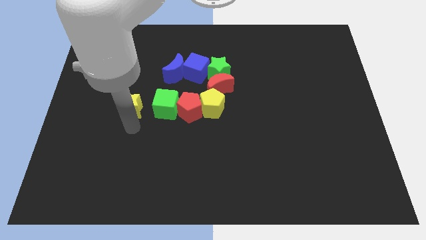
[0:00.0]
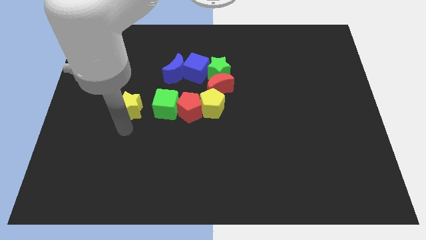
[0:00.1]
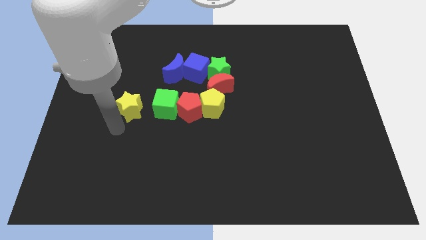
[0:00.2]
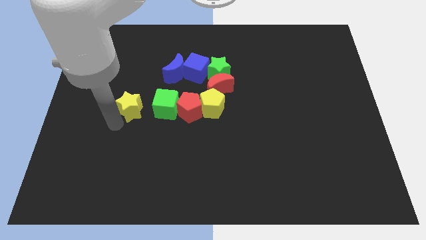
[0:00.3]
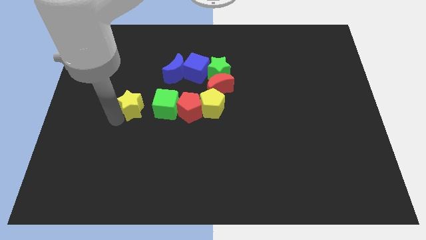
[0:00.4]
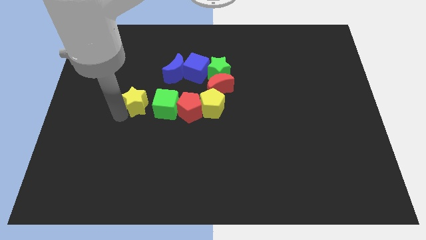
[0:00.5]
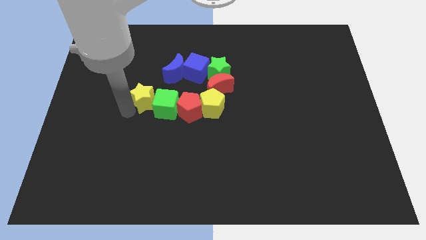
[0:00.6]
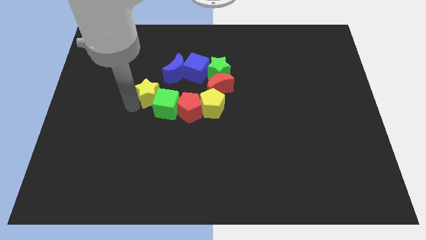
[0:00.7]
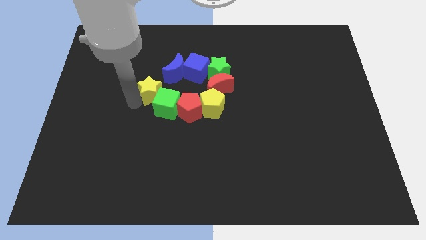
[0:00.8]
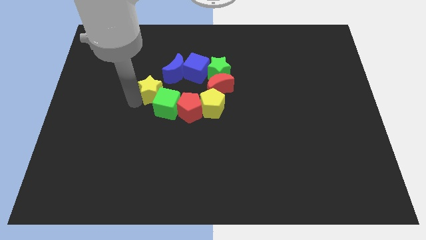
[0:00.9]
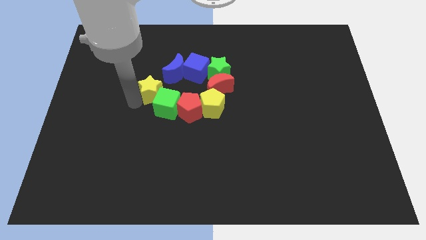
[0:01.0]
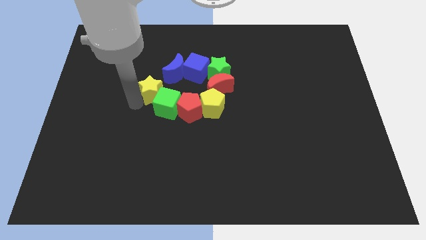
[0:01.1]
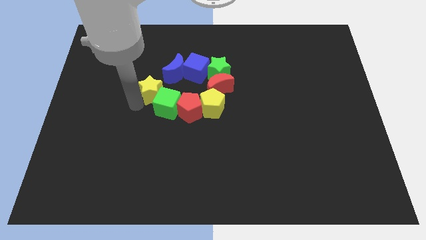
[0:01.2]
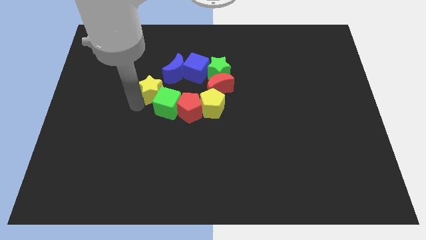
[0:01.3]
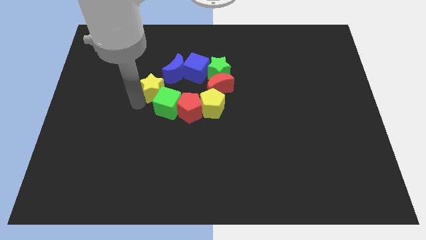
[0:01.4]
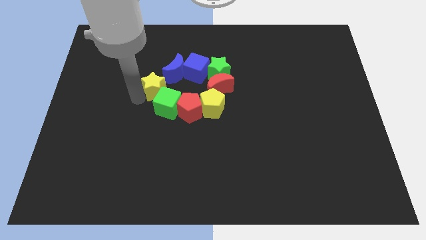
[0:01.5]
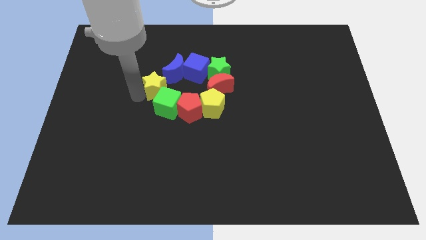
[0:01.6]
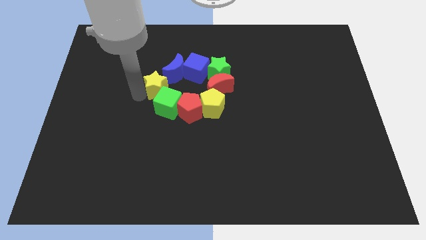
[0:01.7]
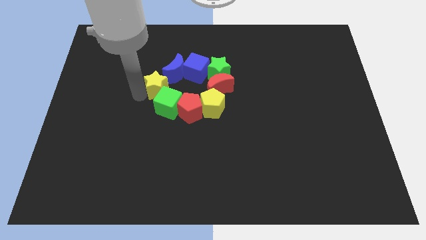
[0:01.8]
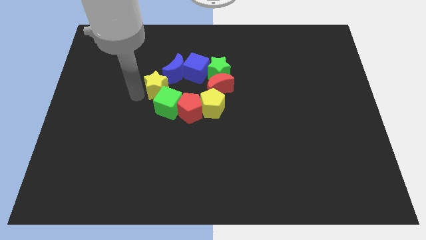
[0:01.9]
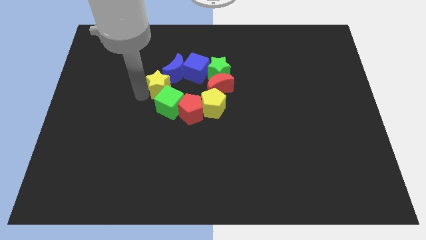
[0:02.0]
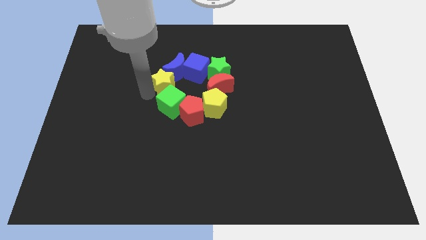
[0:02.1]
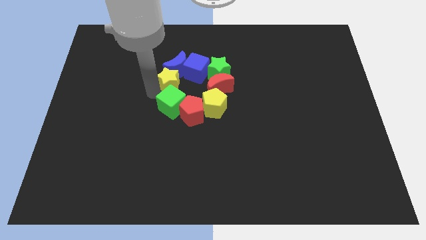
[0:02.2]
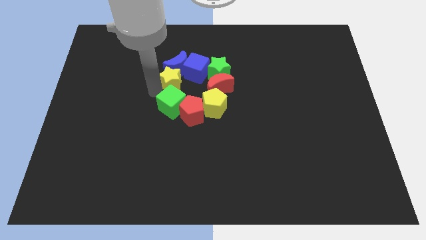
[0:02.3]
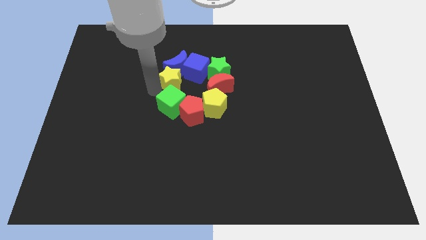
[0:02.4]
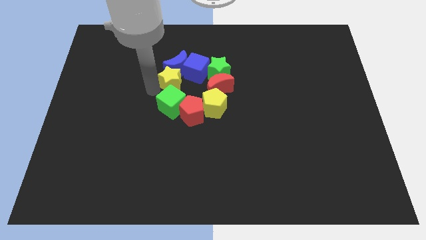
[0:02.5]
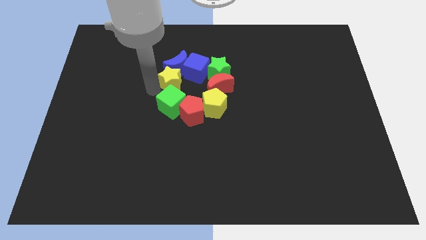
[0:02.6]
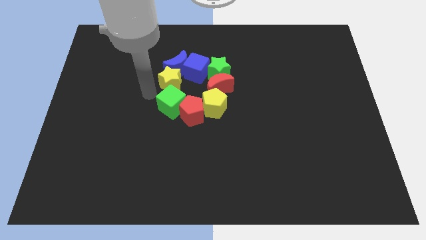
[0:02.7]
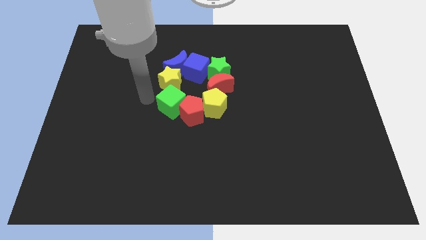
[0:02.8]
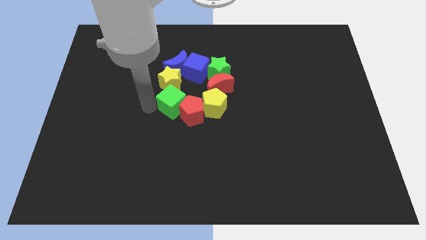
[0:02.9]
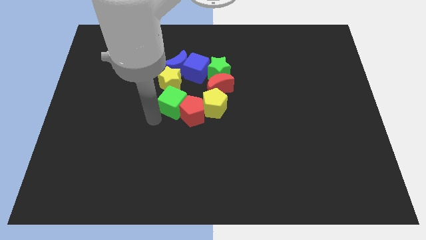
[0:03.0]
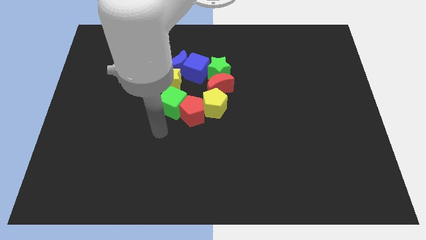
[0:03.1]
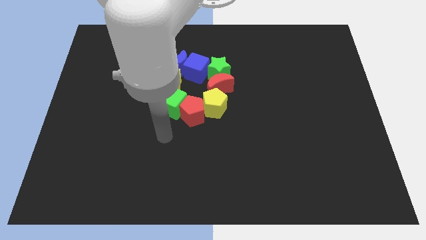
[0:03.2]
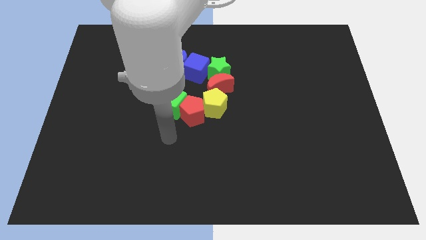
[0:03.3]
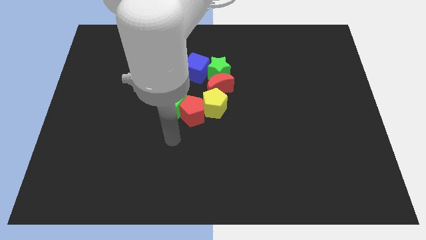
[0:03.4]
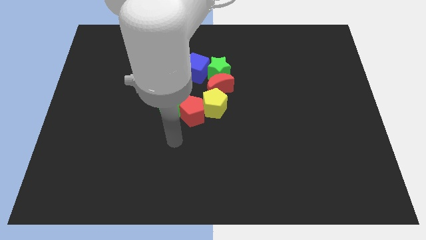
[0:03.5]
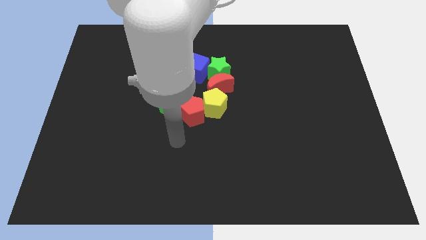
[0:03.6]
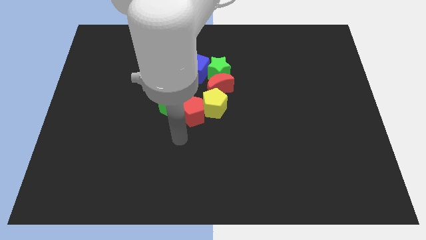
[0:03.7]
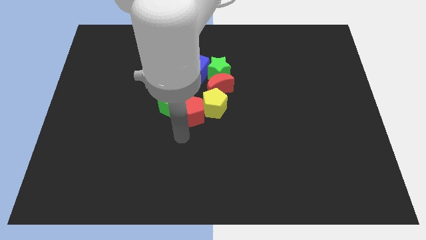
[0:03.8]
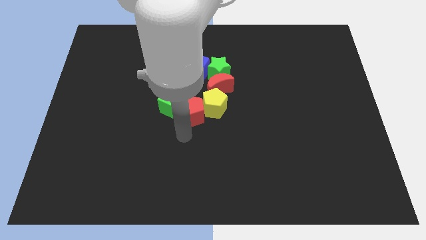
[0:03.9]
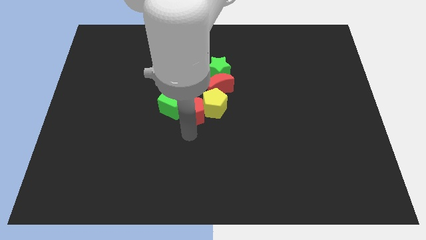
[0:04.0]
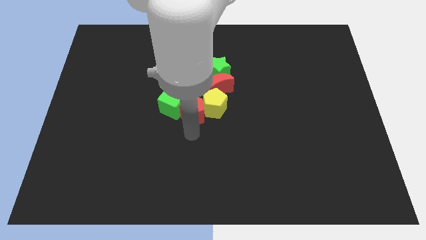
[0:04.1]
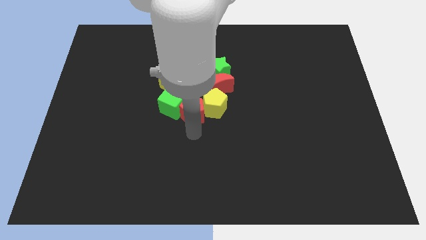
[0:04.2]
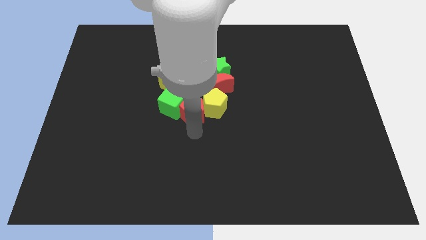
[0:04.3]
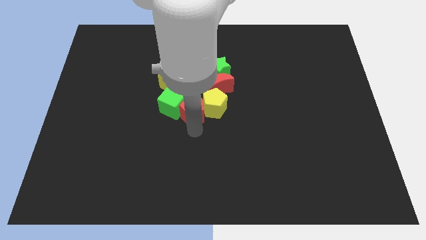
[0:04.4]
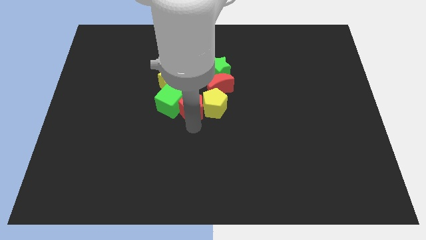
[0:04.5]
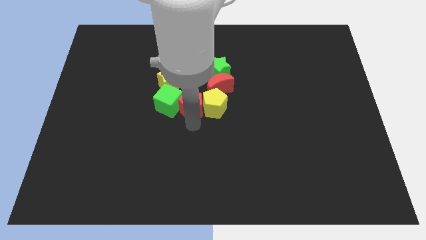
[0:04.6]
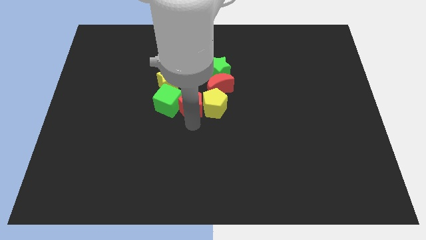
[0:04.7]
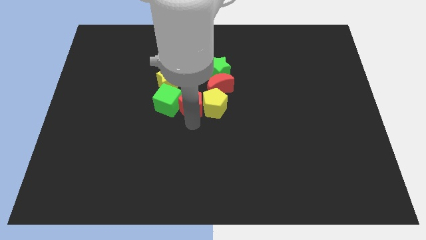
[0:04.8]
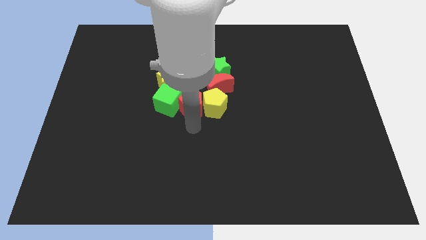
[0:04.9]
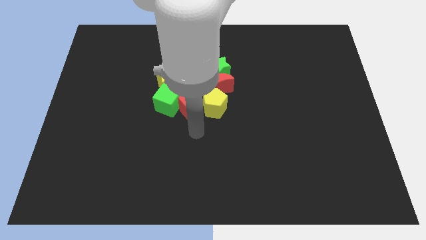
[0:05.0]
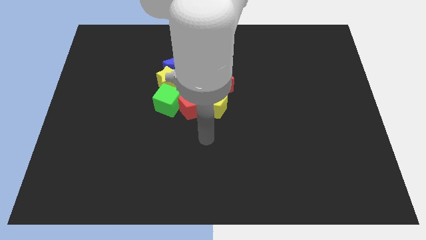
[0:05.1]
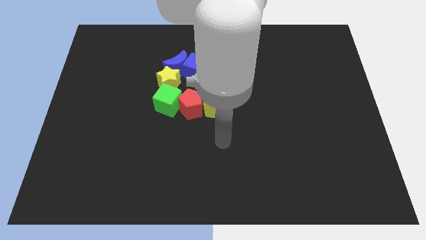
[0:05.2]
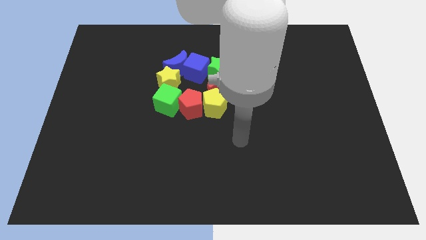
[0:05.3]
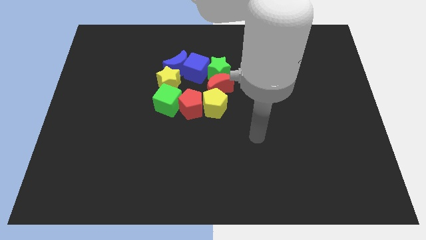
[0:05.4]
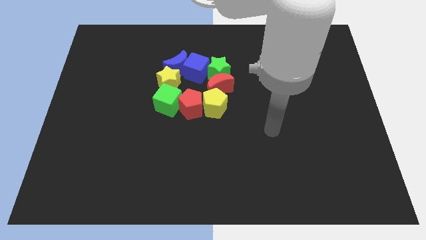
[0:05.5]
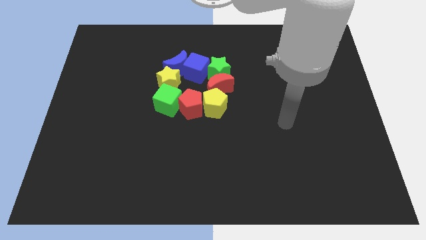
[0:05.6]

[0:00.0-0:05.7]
group up all the blocks

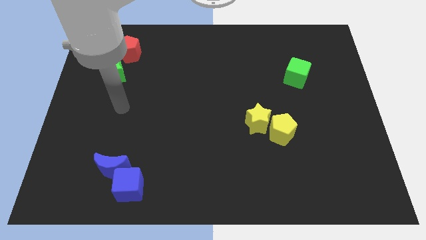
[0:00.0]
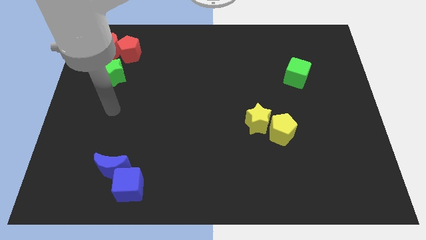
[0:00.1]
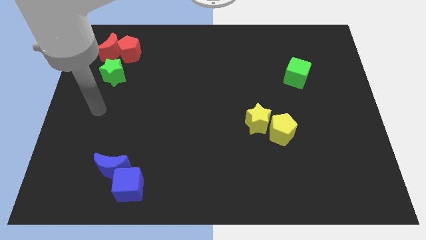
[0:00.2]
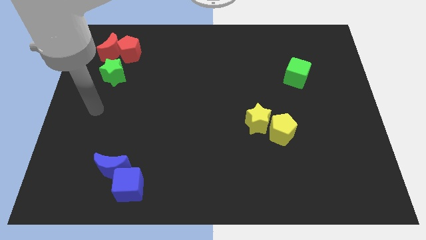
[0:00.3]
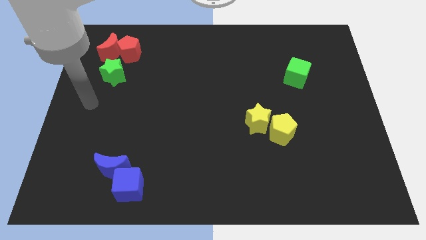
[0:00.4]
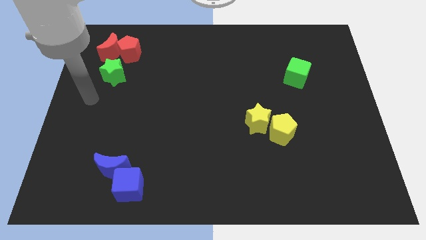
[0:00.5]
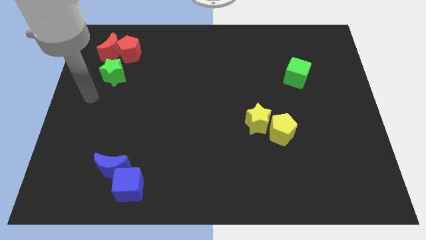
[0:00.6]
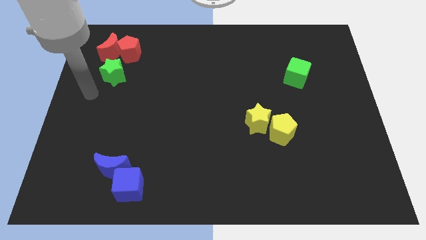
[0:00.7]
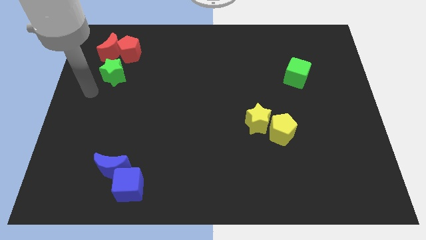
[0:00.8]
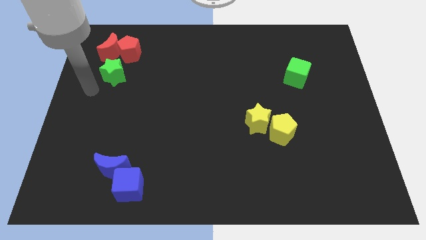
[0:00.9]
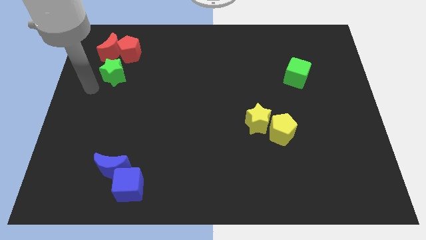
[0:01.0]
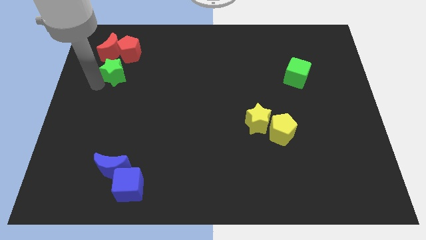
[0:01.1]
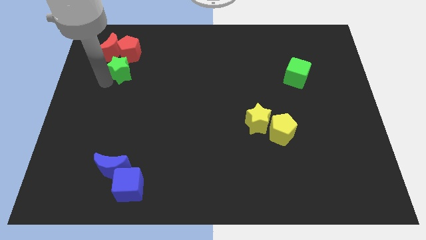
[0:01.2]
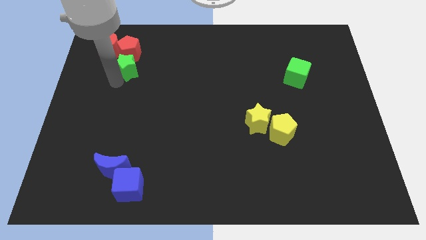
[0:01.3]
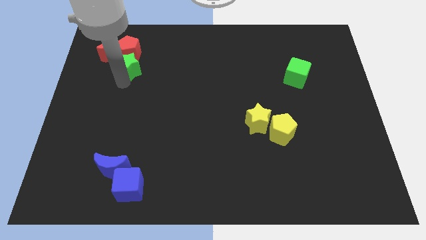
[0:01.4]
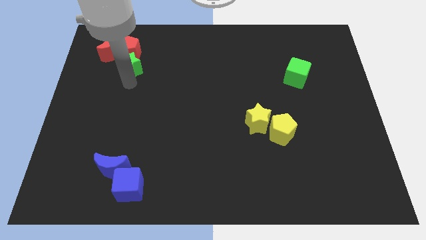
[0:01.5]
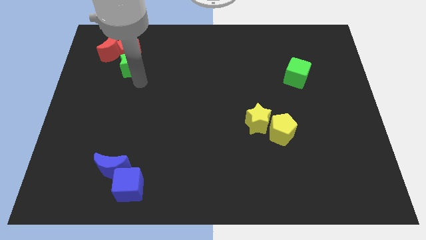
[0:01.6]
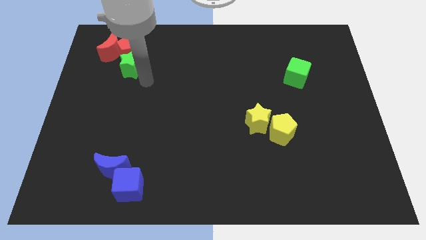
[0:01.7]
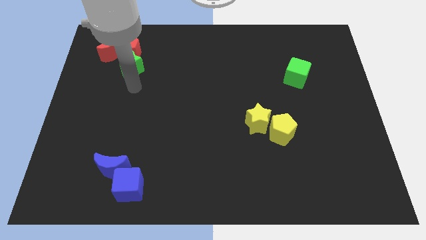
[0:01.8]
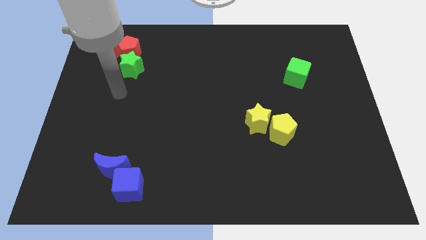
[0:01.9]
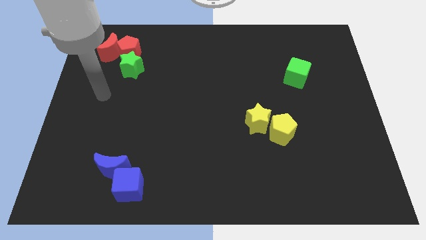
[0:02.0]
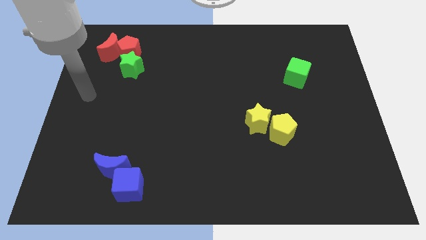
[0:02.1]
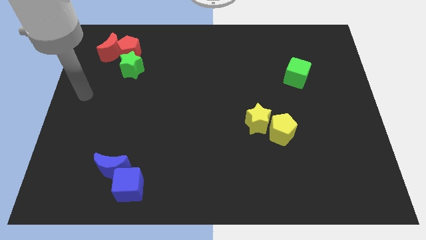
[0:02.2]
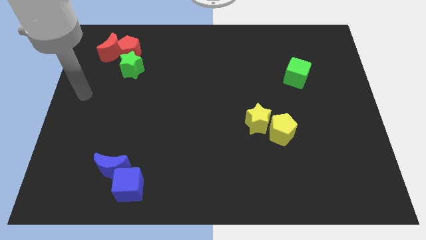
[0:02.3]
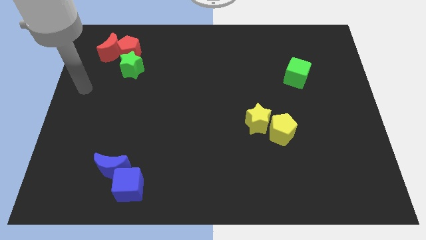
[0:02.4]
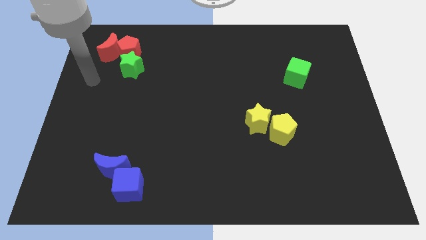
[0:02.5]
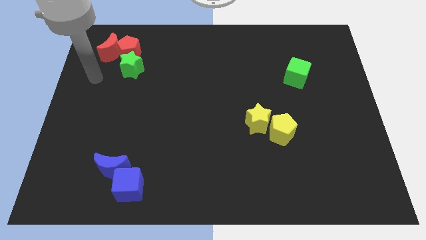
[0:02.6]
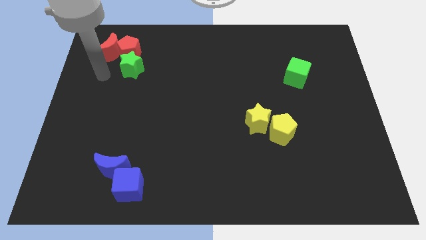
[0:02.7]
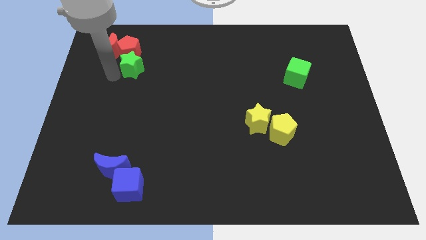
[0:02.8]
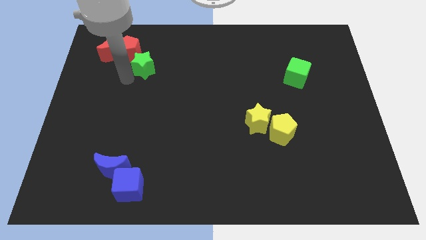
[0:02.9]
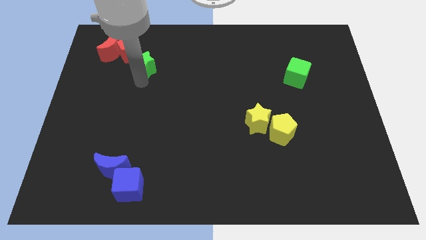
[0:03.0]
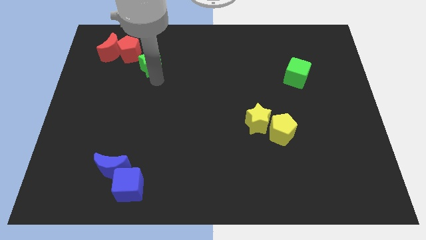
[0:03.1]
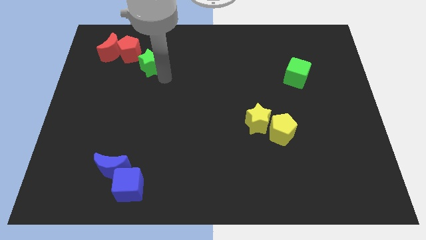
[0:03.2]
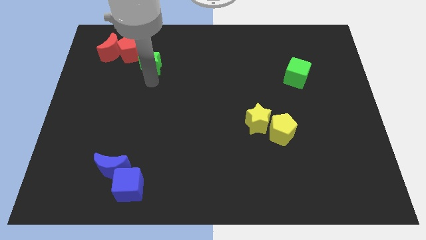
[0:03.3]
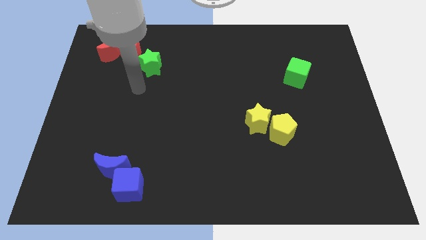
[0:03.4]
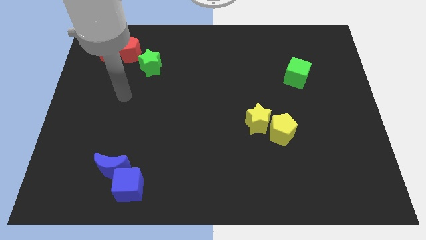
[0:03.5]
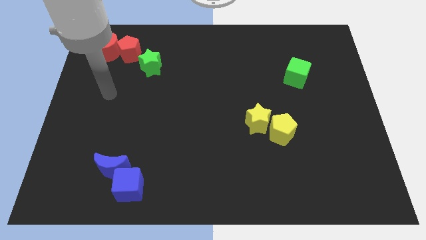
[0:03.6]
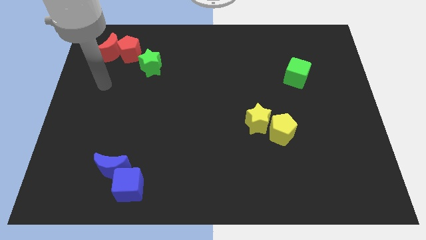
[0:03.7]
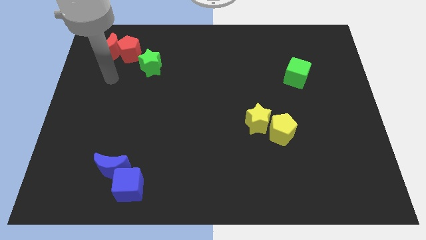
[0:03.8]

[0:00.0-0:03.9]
move green star right below the red pentagon
